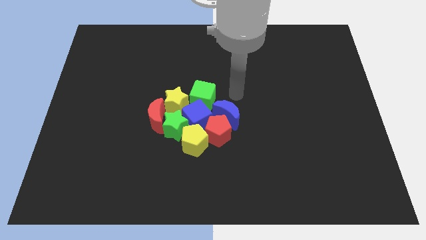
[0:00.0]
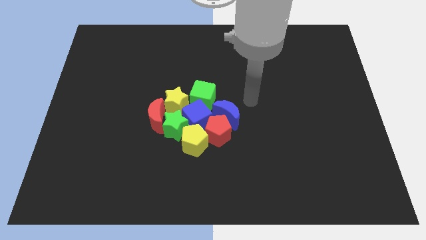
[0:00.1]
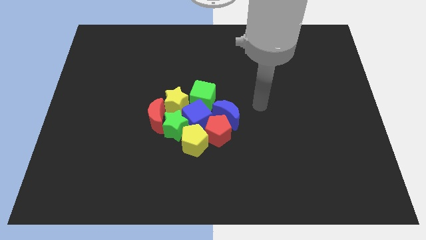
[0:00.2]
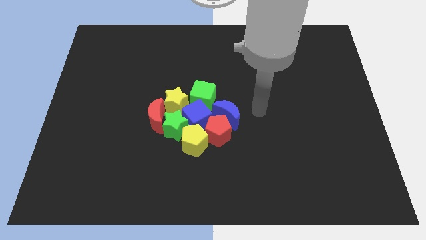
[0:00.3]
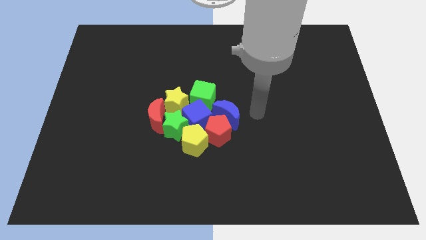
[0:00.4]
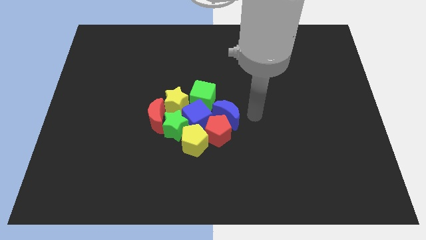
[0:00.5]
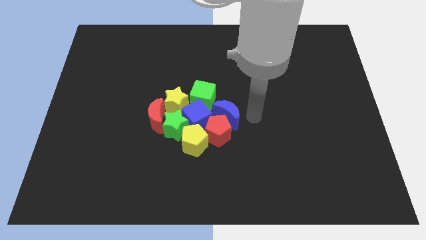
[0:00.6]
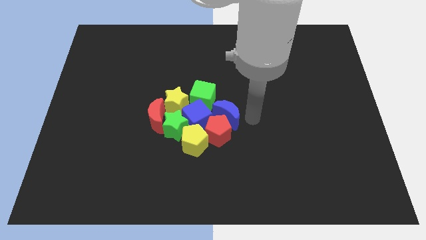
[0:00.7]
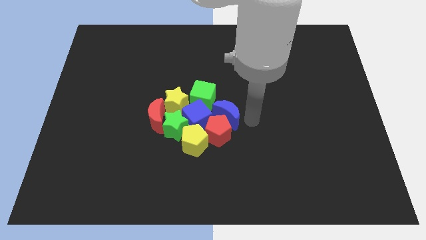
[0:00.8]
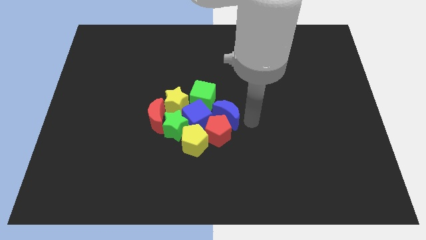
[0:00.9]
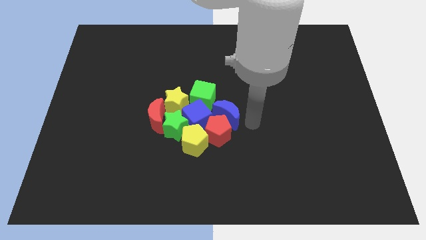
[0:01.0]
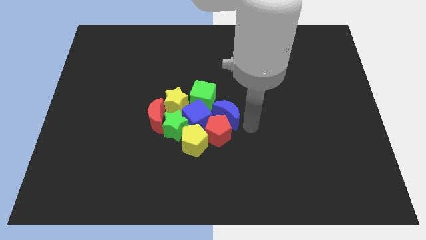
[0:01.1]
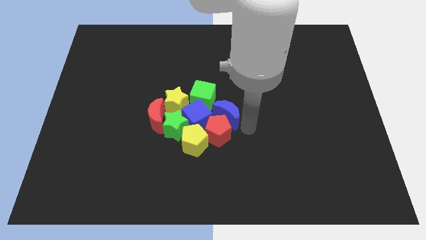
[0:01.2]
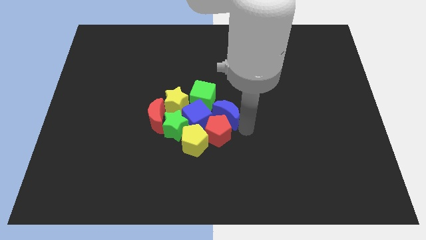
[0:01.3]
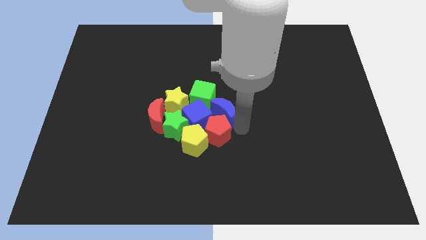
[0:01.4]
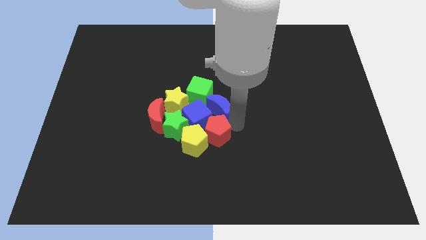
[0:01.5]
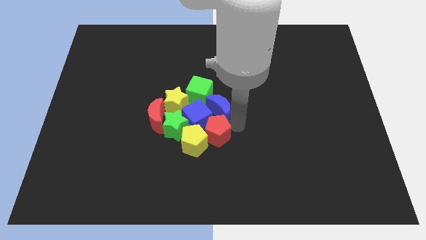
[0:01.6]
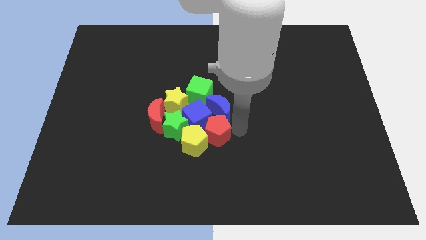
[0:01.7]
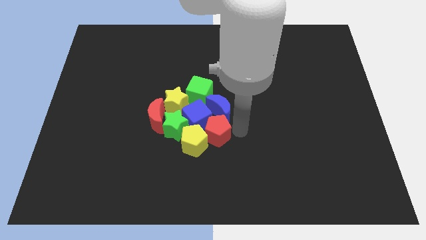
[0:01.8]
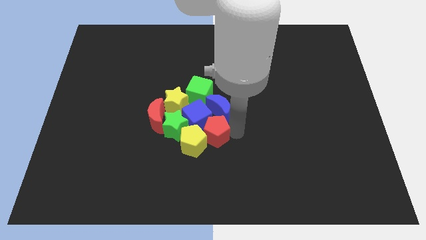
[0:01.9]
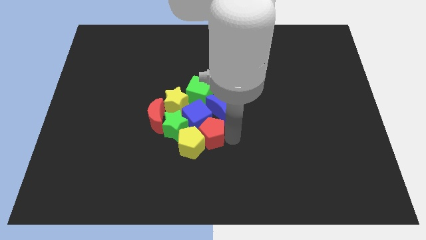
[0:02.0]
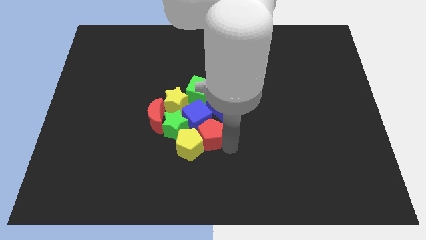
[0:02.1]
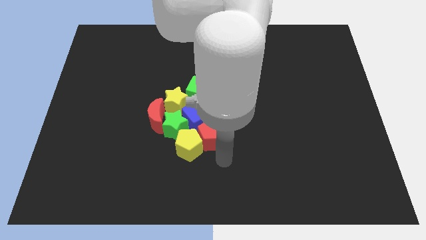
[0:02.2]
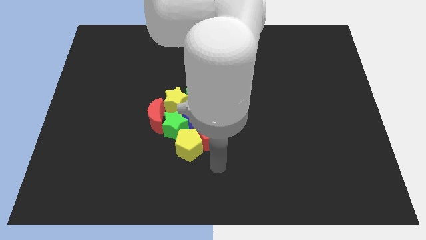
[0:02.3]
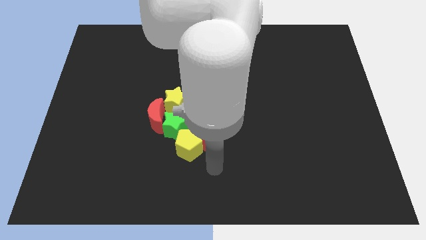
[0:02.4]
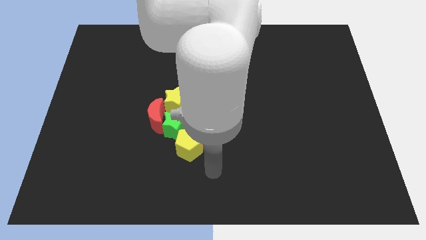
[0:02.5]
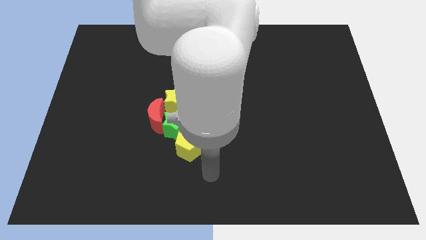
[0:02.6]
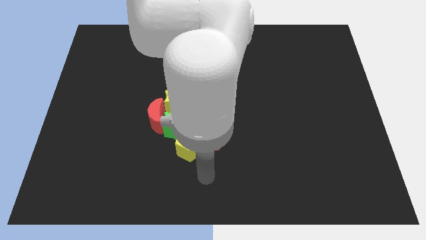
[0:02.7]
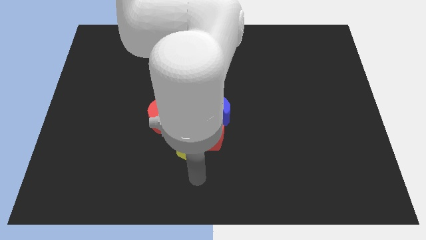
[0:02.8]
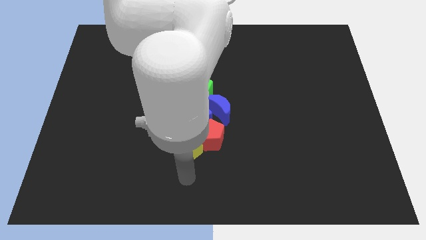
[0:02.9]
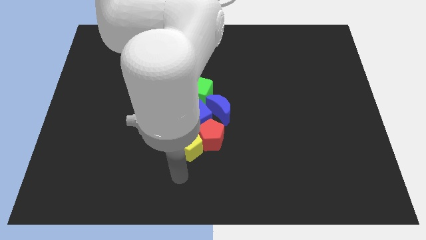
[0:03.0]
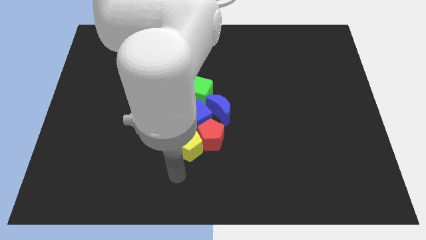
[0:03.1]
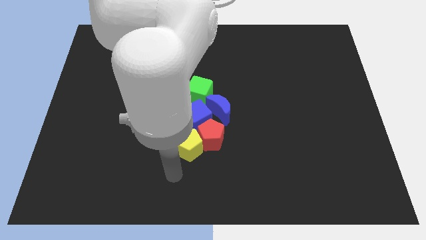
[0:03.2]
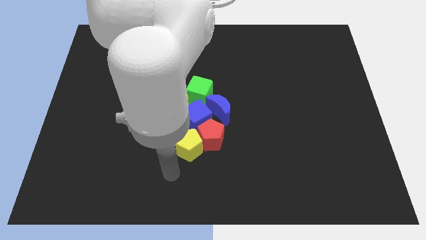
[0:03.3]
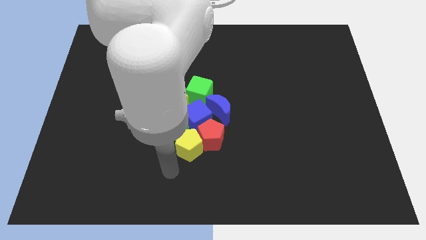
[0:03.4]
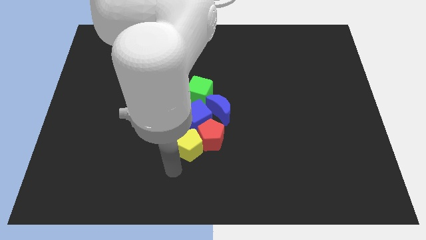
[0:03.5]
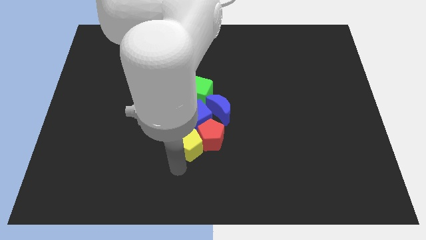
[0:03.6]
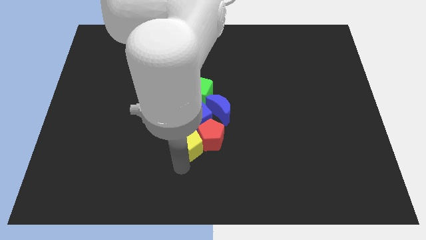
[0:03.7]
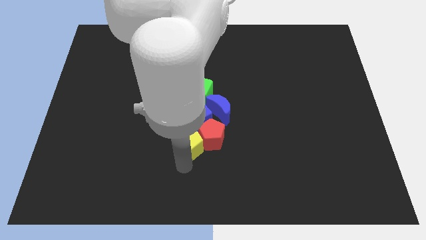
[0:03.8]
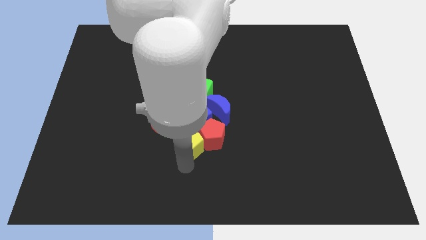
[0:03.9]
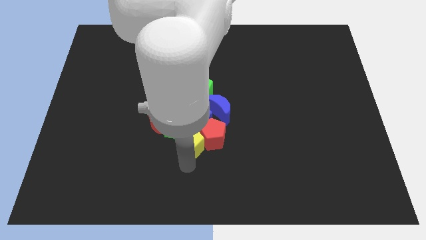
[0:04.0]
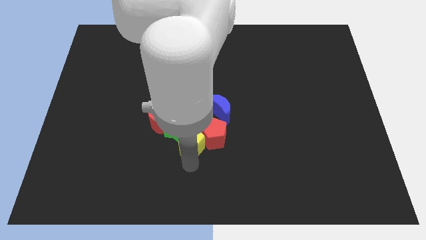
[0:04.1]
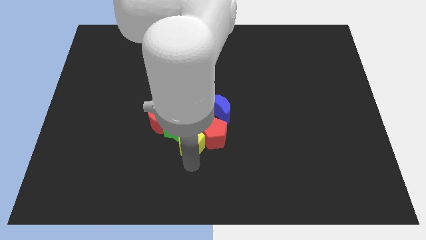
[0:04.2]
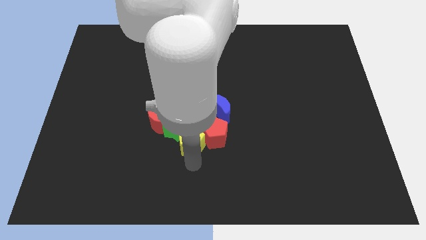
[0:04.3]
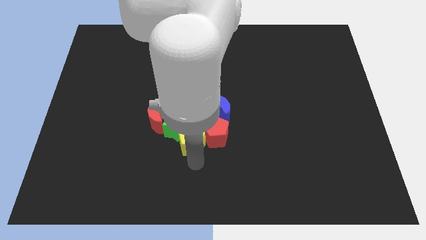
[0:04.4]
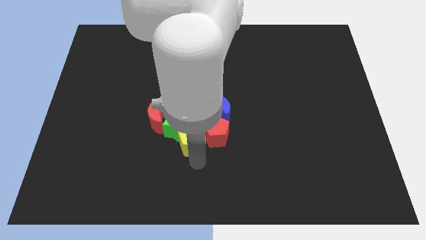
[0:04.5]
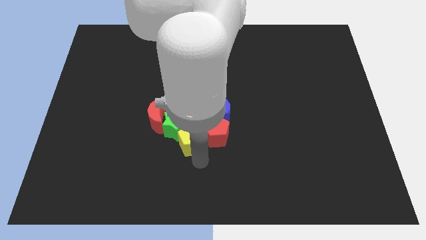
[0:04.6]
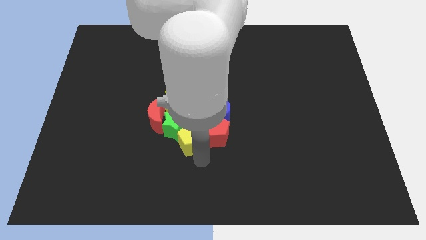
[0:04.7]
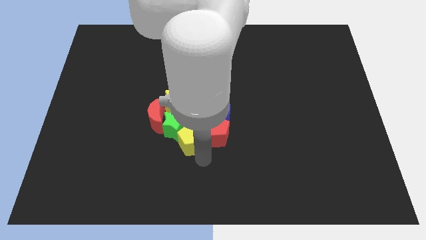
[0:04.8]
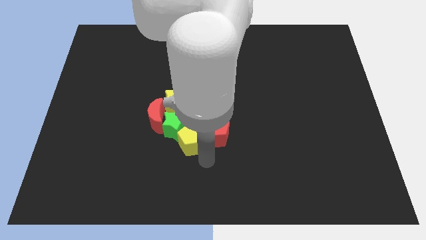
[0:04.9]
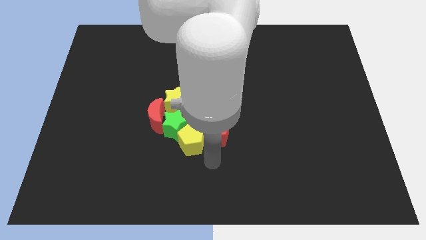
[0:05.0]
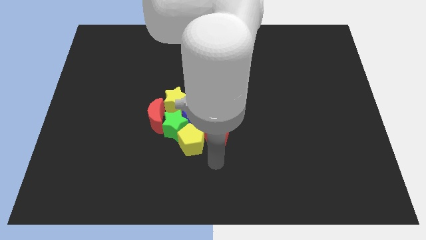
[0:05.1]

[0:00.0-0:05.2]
adjust the group of blocks at the center of the board

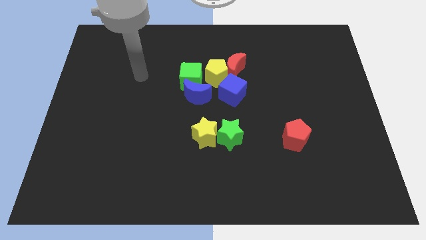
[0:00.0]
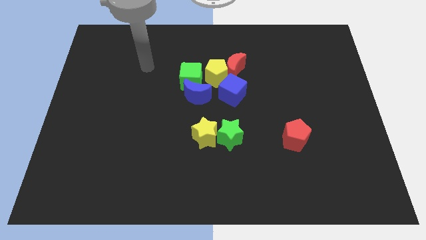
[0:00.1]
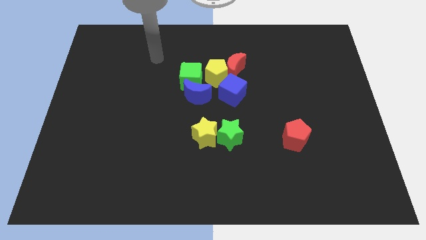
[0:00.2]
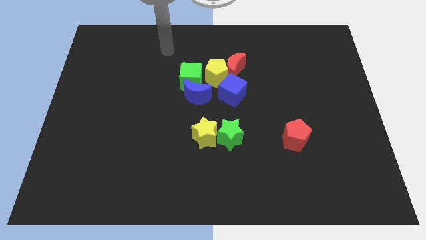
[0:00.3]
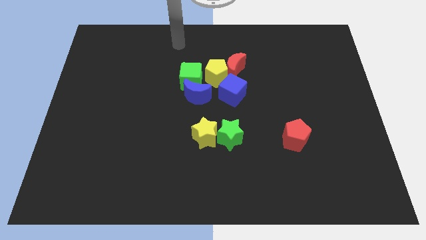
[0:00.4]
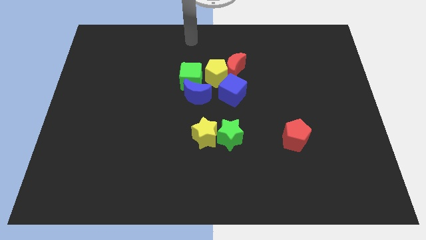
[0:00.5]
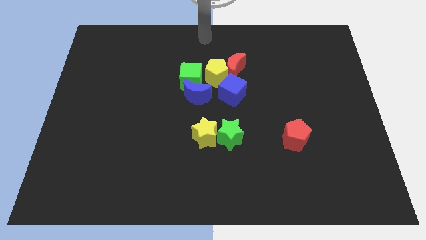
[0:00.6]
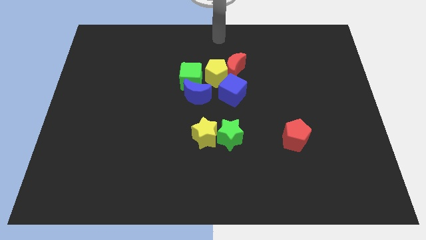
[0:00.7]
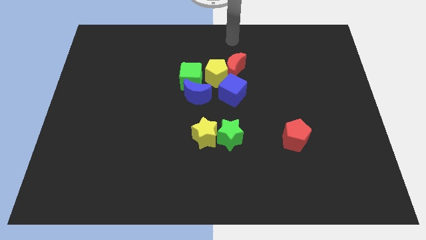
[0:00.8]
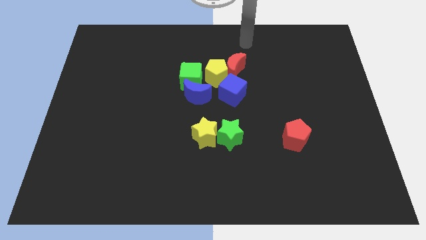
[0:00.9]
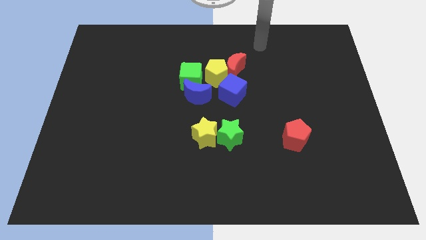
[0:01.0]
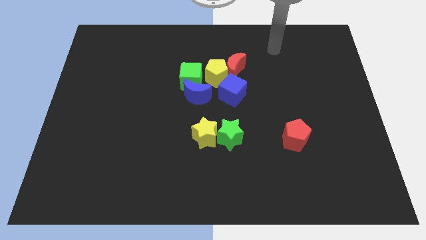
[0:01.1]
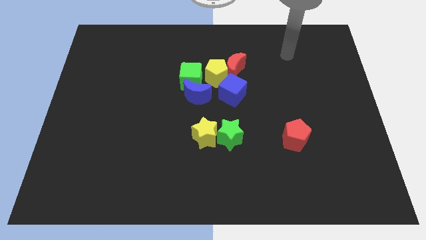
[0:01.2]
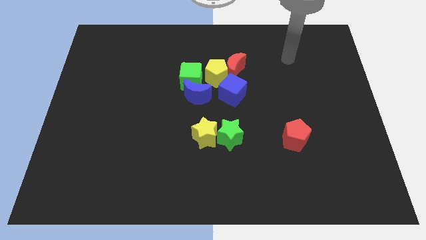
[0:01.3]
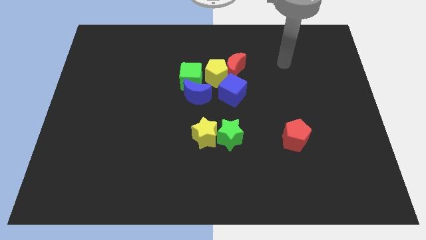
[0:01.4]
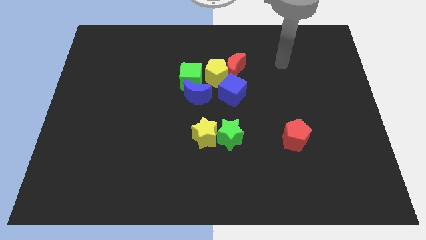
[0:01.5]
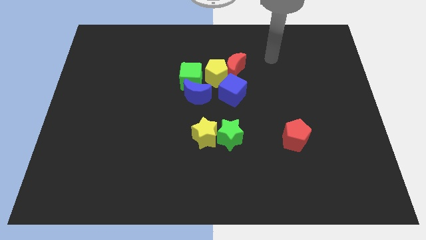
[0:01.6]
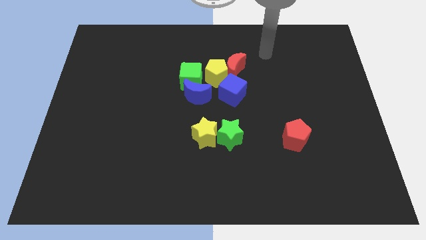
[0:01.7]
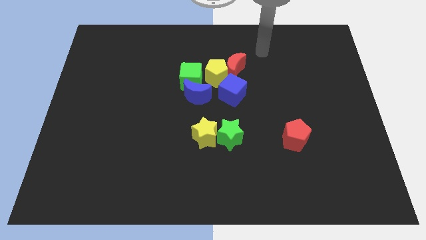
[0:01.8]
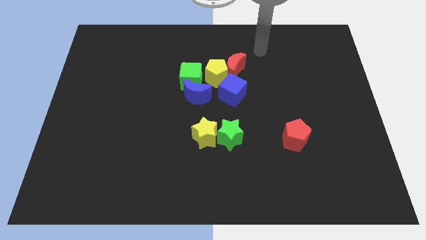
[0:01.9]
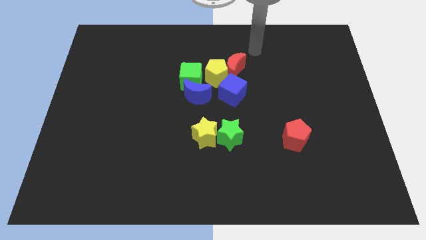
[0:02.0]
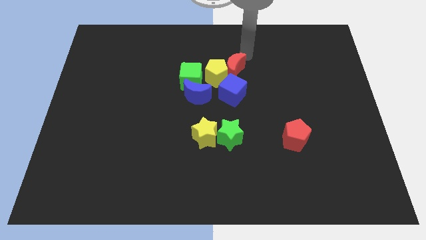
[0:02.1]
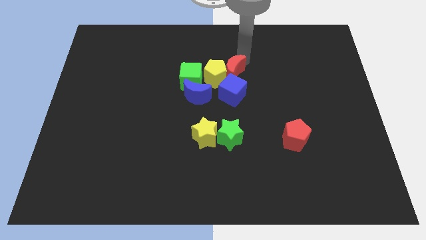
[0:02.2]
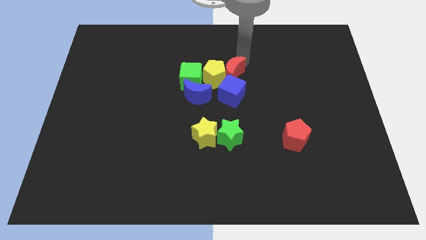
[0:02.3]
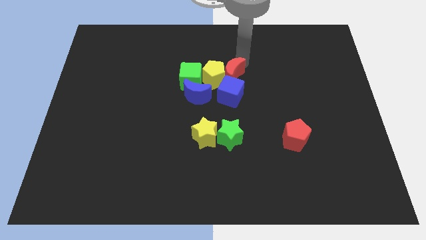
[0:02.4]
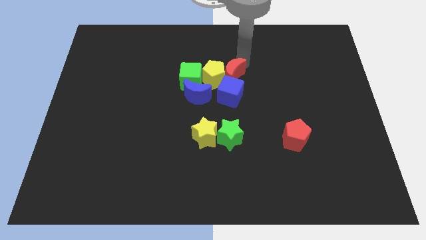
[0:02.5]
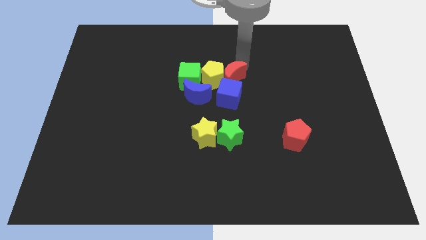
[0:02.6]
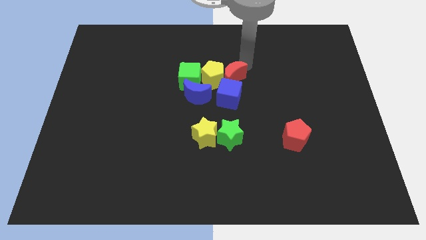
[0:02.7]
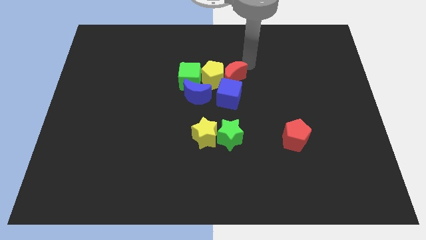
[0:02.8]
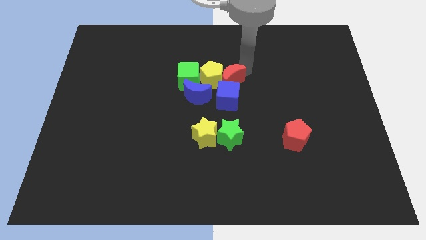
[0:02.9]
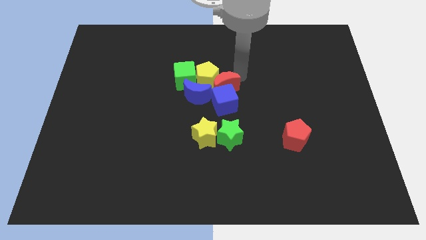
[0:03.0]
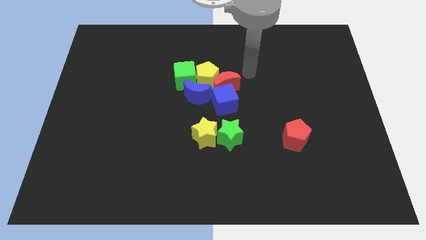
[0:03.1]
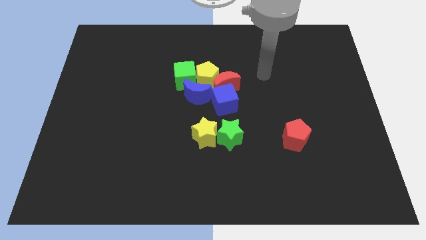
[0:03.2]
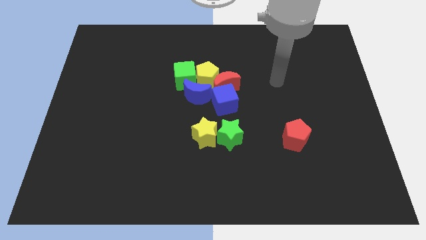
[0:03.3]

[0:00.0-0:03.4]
push the red crescent between the yellow pentagon and the blue block

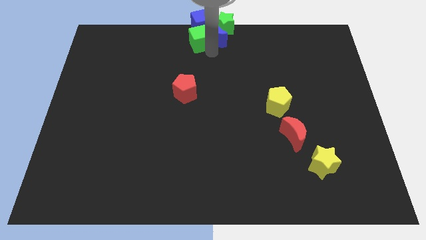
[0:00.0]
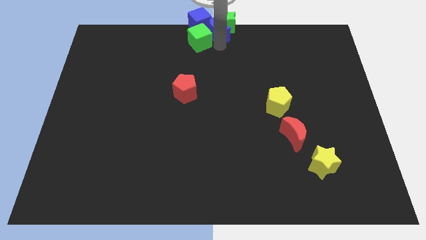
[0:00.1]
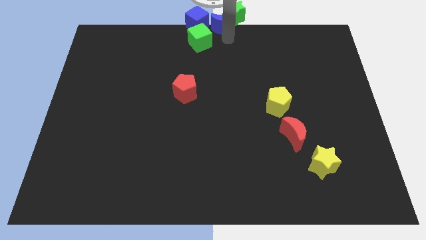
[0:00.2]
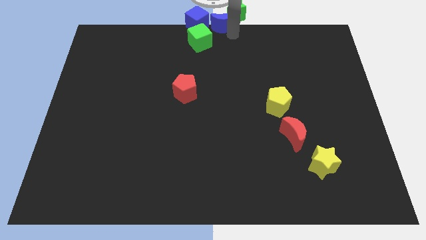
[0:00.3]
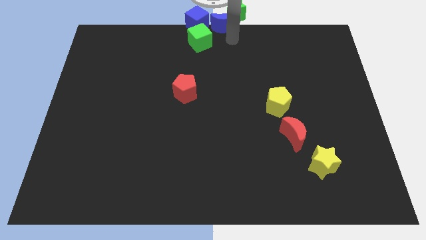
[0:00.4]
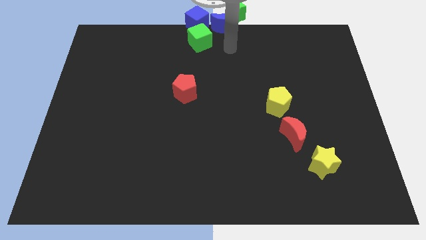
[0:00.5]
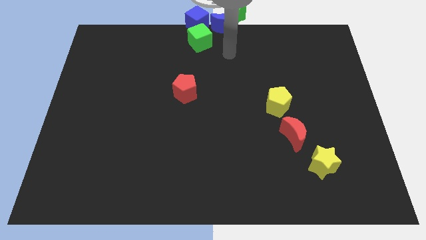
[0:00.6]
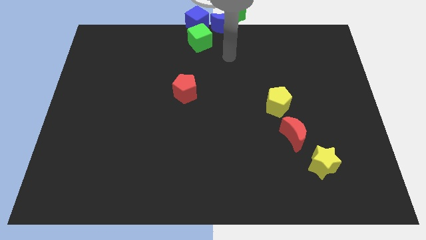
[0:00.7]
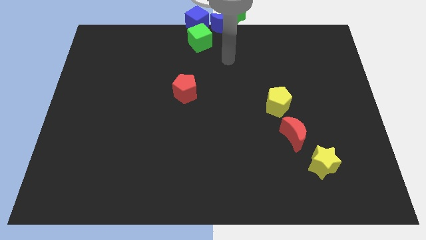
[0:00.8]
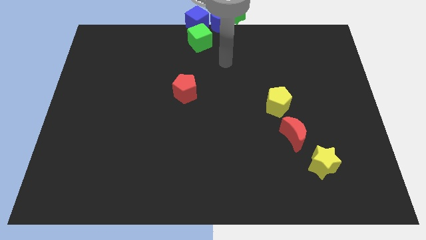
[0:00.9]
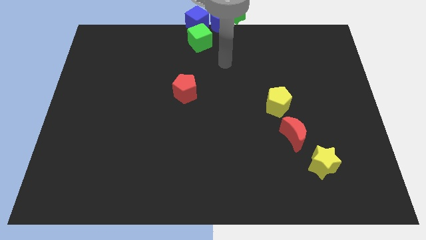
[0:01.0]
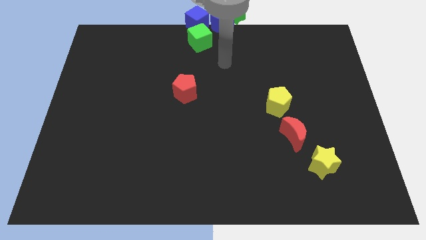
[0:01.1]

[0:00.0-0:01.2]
push the blue crescent towards top
